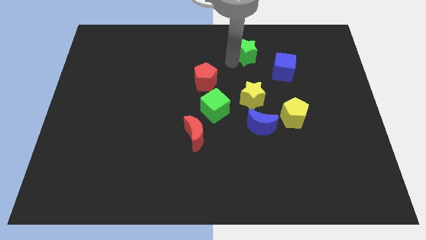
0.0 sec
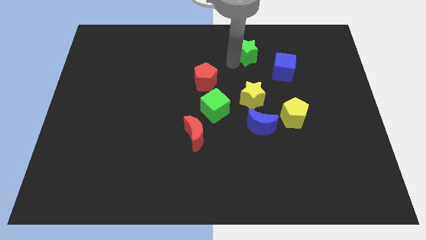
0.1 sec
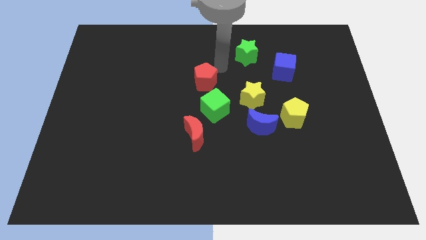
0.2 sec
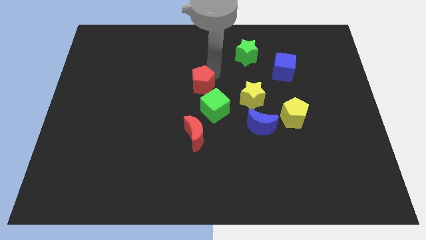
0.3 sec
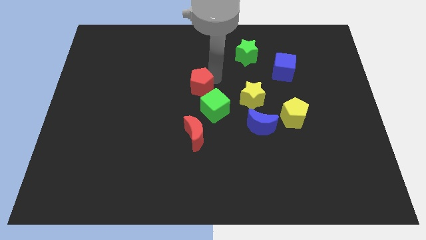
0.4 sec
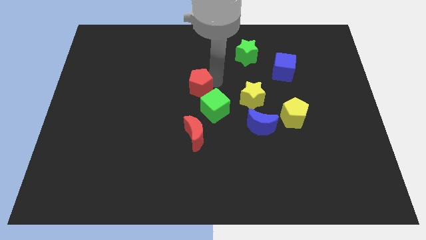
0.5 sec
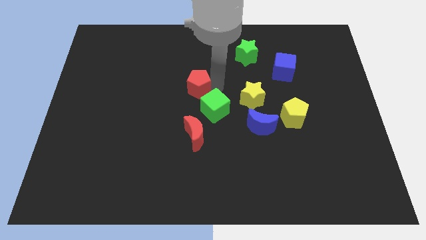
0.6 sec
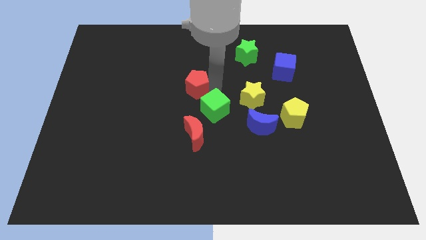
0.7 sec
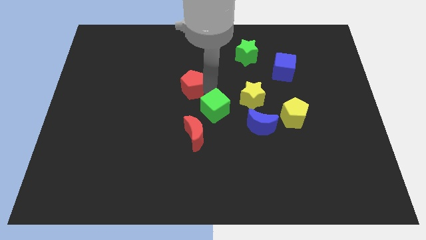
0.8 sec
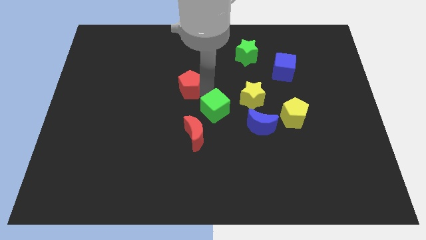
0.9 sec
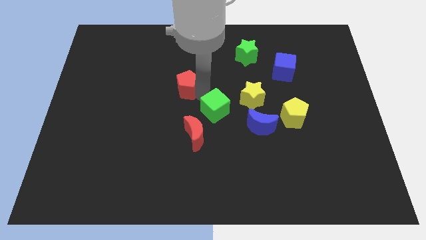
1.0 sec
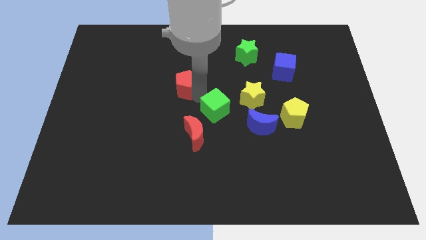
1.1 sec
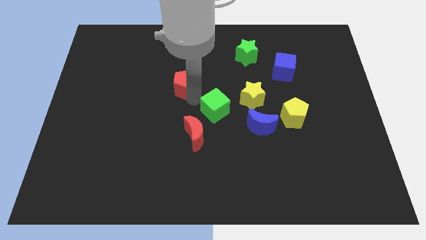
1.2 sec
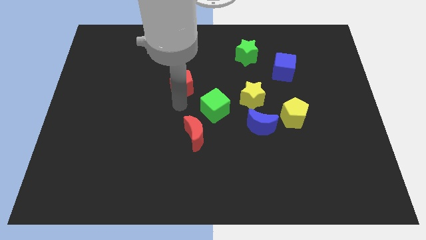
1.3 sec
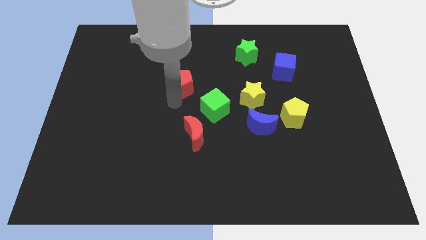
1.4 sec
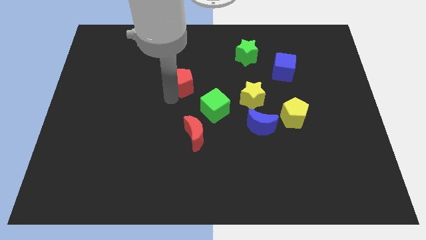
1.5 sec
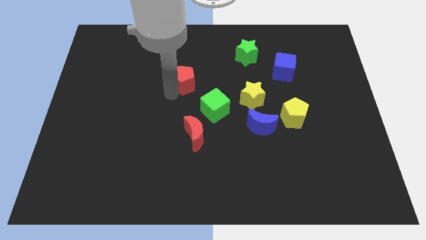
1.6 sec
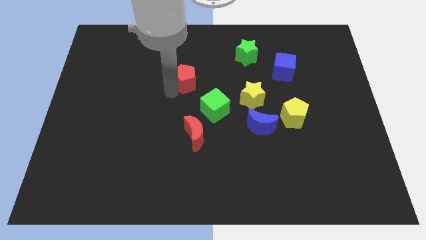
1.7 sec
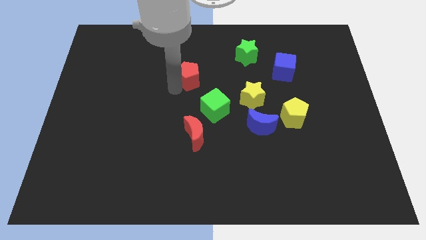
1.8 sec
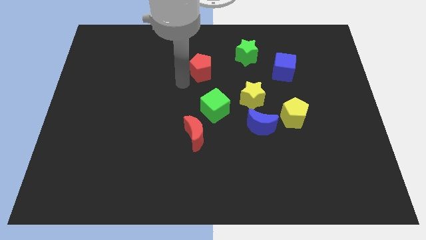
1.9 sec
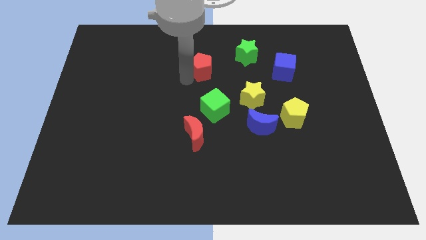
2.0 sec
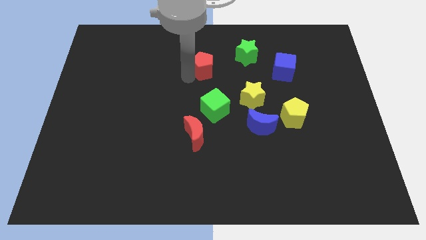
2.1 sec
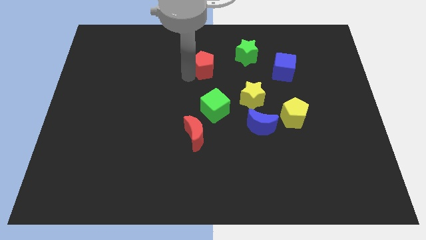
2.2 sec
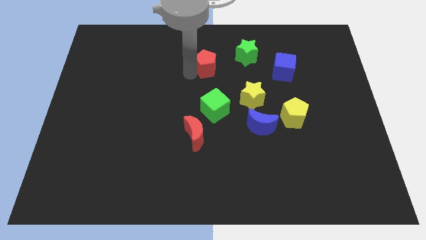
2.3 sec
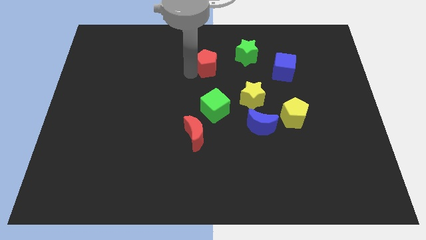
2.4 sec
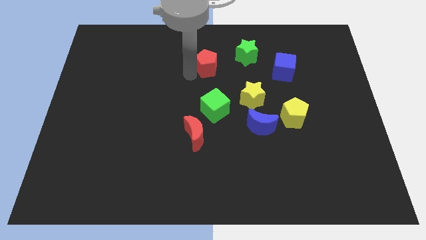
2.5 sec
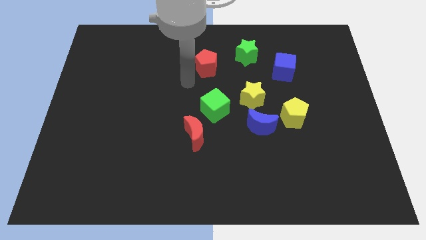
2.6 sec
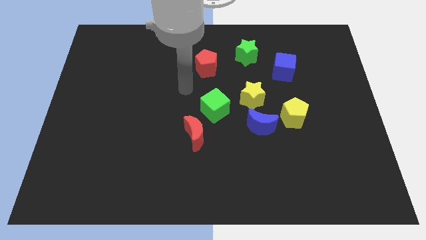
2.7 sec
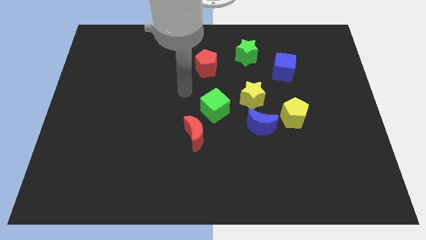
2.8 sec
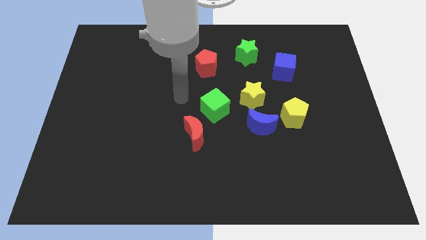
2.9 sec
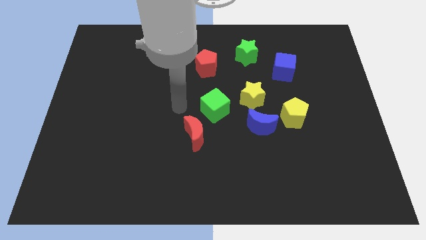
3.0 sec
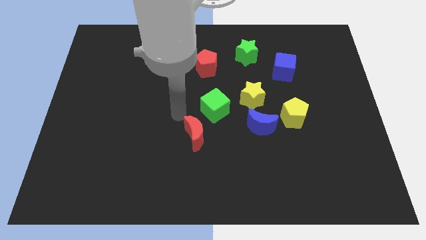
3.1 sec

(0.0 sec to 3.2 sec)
drag the red pentagon away from the green cube

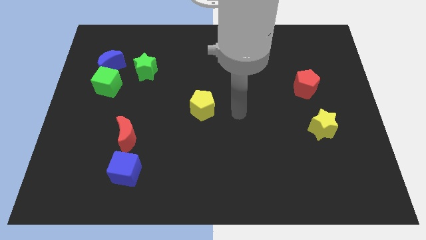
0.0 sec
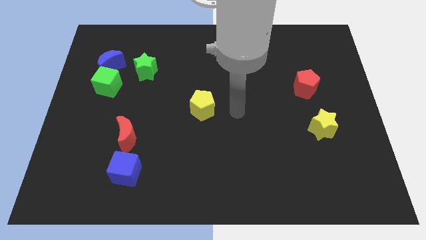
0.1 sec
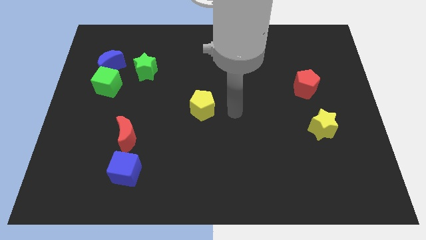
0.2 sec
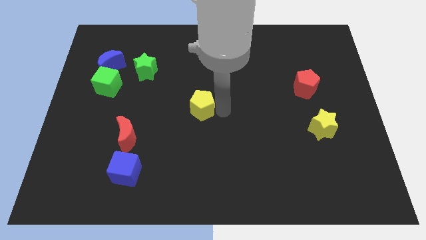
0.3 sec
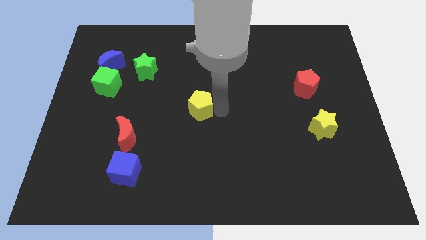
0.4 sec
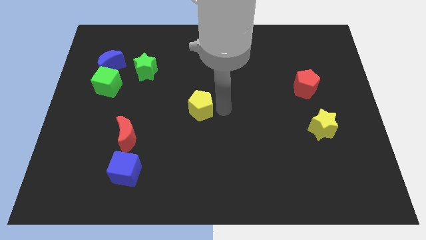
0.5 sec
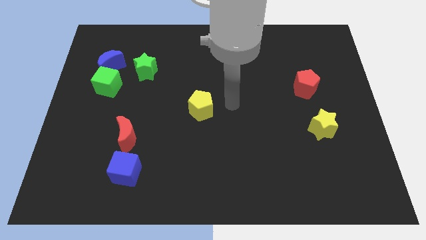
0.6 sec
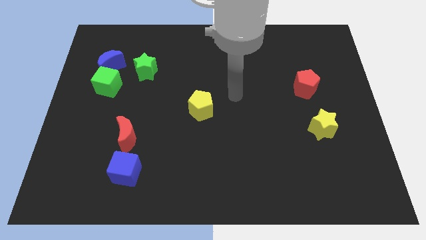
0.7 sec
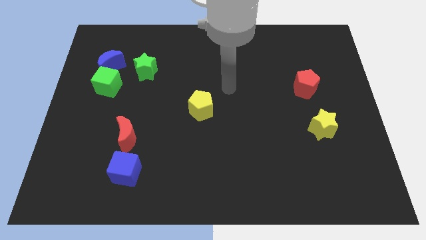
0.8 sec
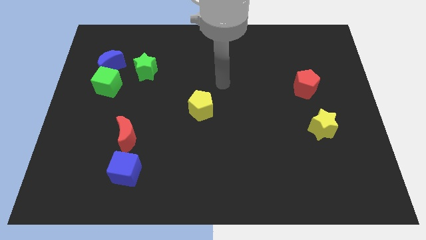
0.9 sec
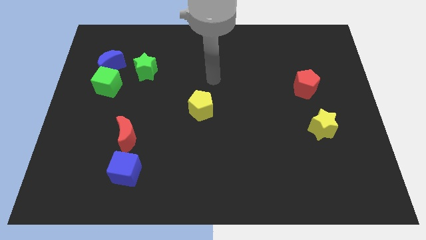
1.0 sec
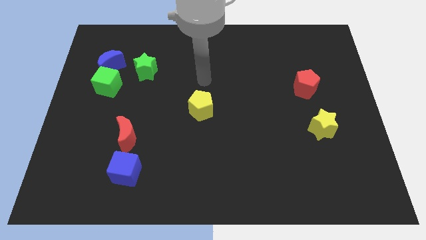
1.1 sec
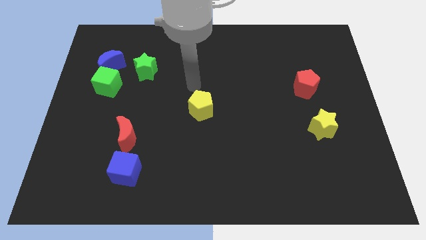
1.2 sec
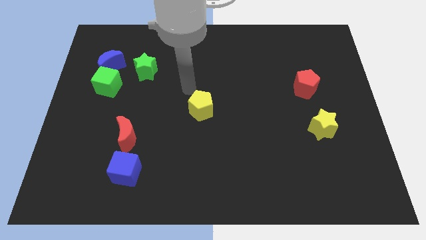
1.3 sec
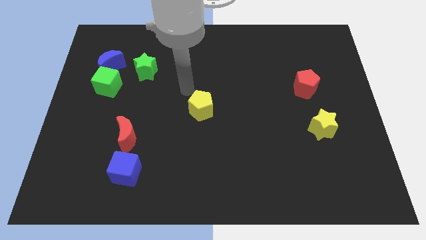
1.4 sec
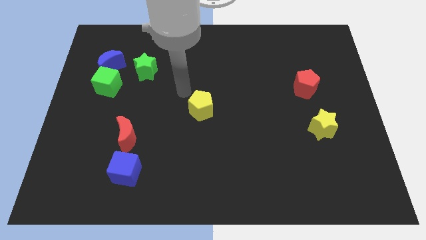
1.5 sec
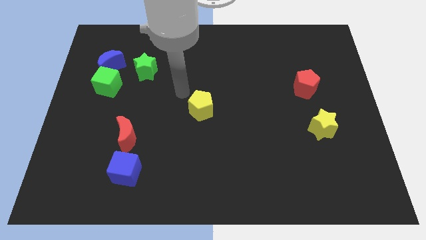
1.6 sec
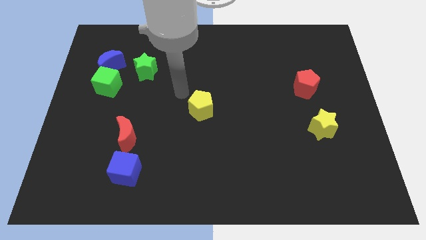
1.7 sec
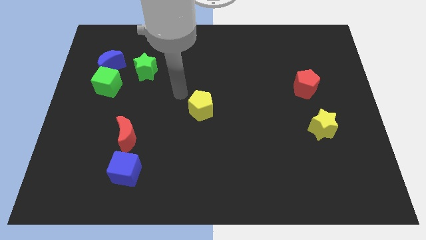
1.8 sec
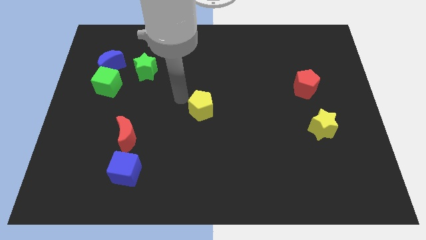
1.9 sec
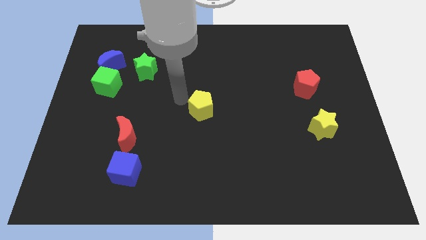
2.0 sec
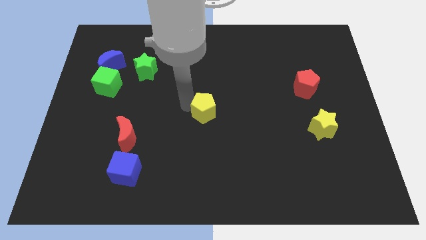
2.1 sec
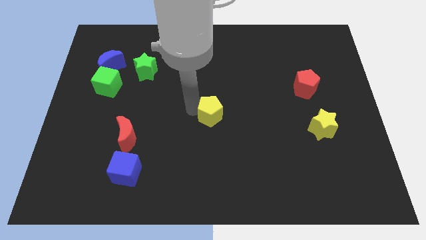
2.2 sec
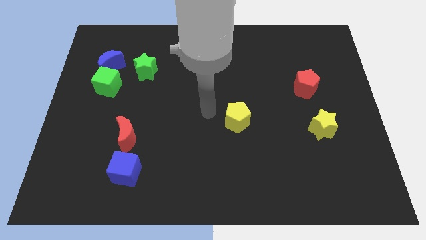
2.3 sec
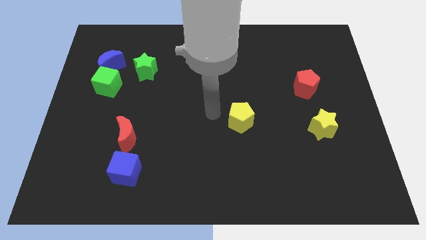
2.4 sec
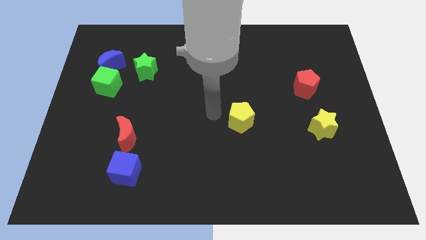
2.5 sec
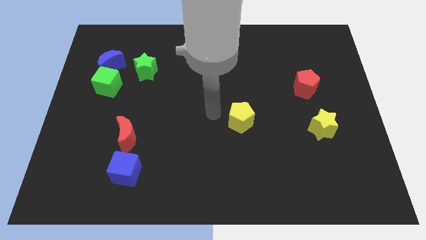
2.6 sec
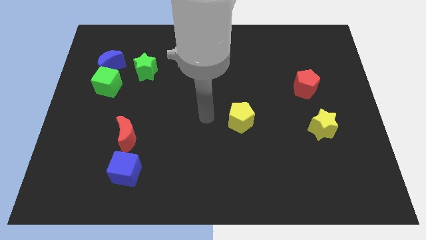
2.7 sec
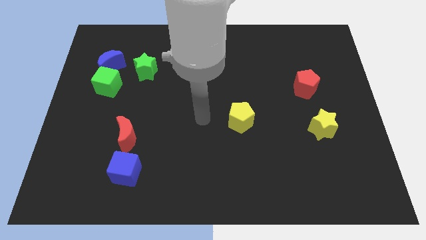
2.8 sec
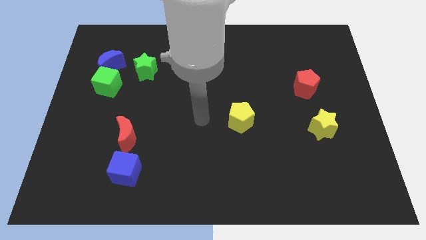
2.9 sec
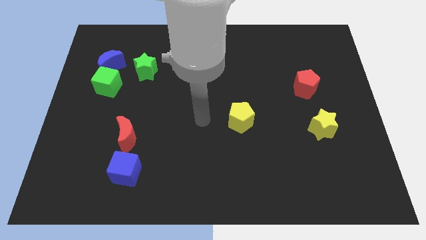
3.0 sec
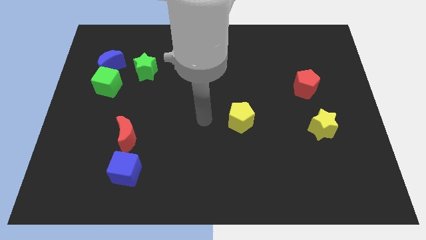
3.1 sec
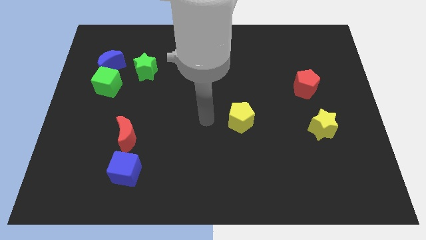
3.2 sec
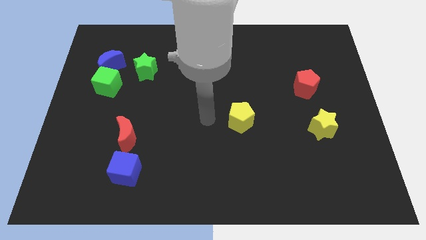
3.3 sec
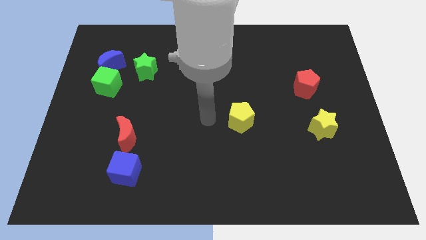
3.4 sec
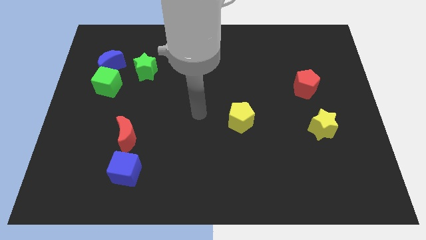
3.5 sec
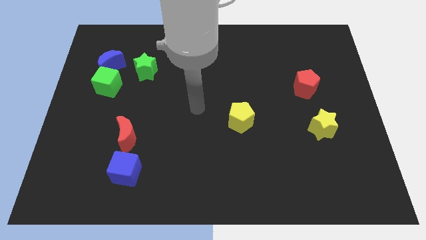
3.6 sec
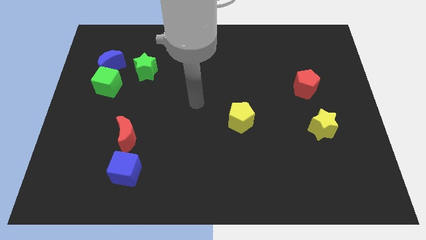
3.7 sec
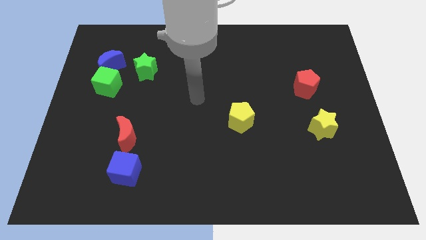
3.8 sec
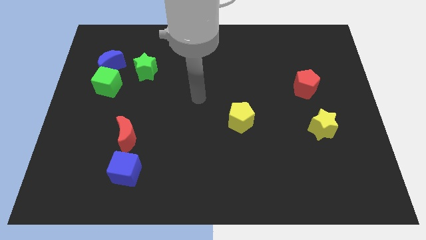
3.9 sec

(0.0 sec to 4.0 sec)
push the yellow pentagon to the center of the board

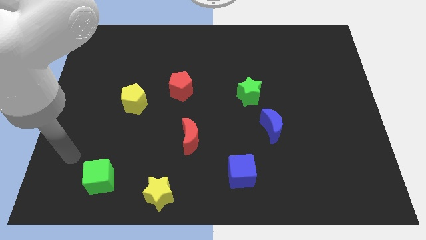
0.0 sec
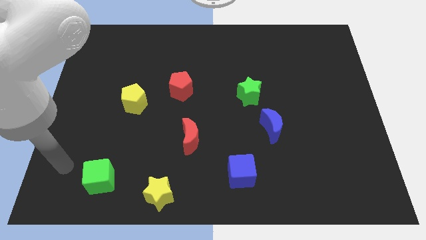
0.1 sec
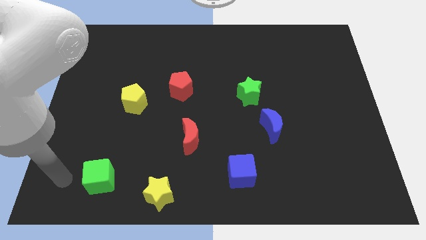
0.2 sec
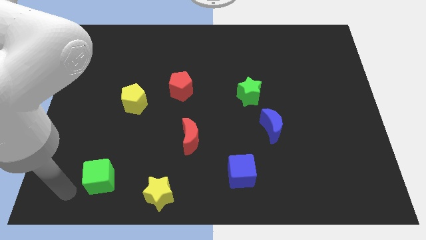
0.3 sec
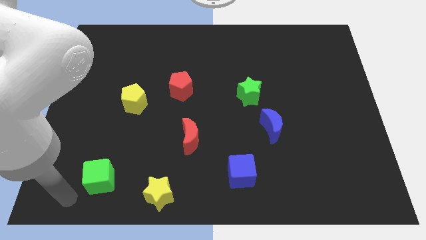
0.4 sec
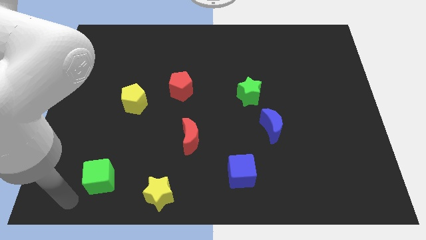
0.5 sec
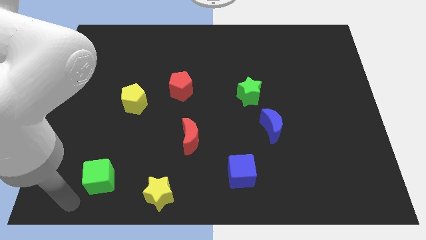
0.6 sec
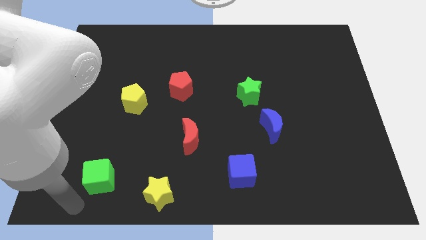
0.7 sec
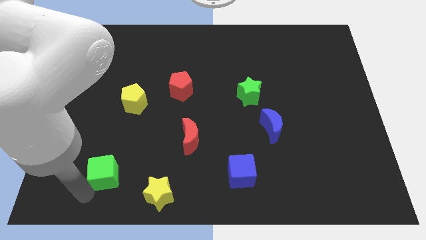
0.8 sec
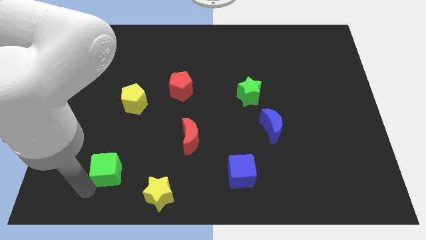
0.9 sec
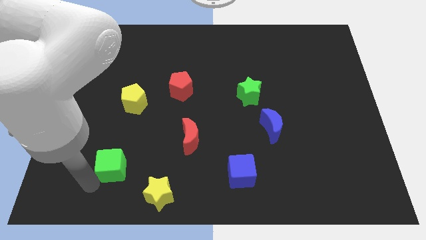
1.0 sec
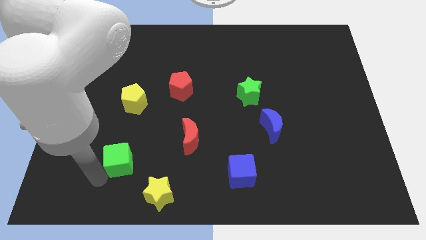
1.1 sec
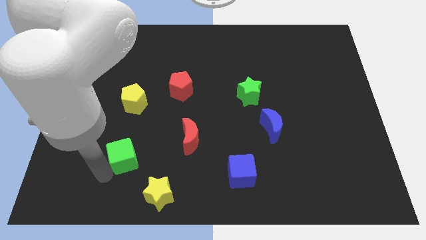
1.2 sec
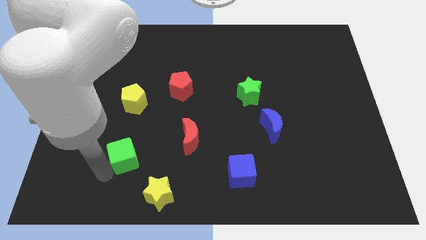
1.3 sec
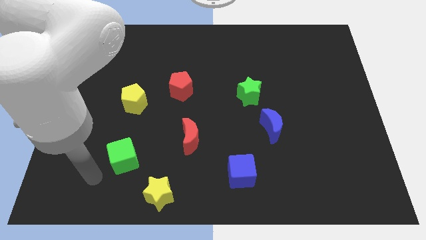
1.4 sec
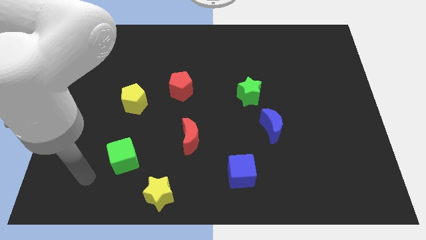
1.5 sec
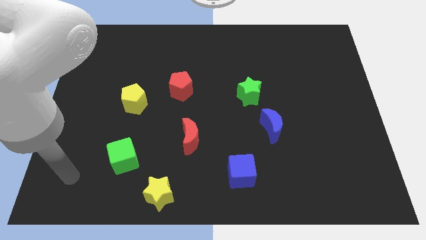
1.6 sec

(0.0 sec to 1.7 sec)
move the green cube diagonally to the top left of the yellow star

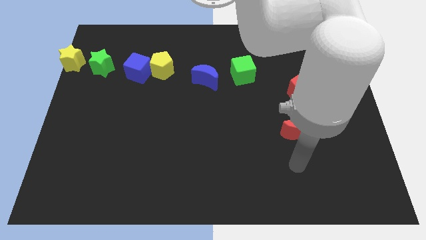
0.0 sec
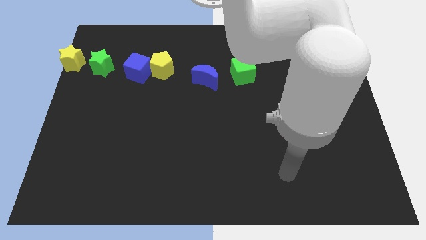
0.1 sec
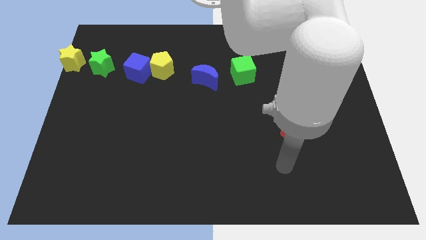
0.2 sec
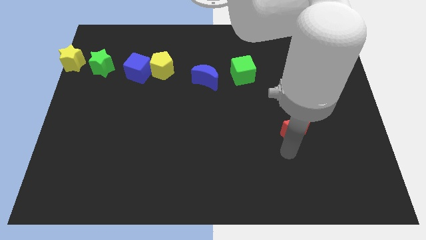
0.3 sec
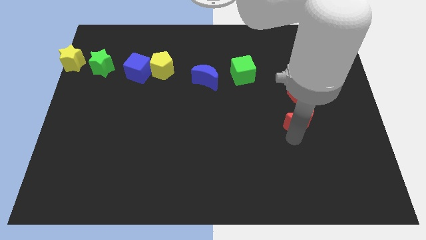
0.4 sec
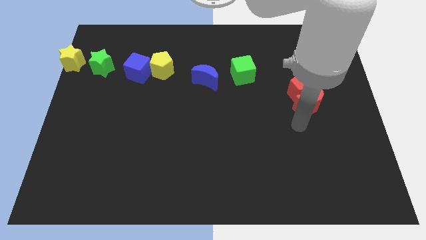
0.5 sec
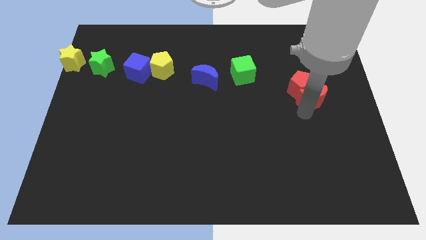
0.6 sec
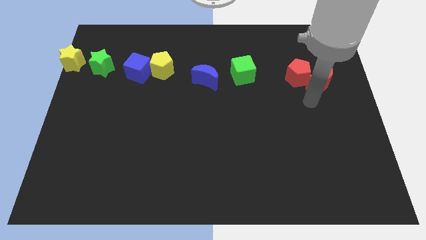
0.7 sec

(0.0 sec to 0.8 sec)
push the red crescent into the red pentagon
